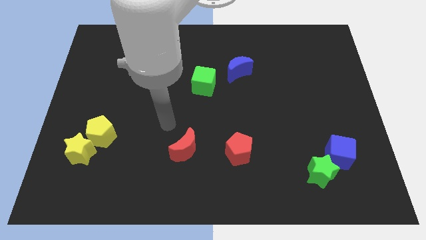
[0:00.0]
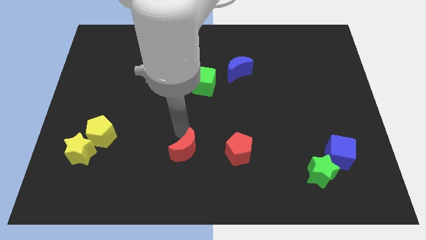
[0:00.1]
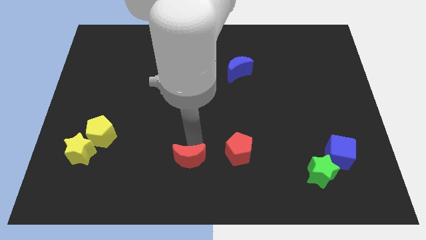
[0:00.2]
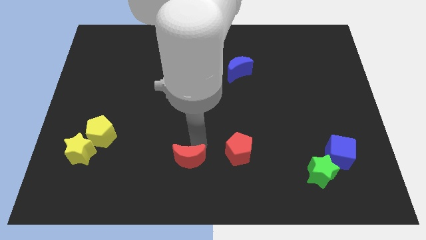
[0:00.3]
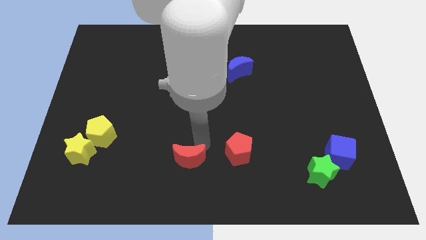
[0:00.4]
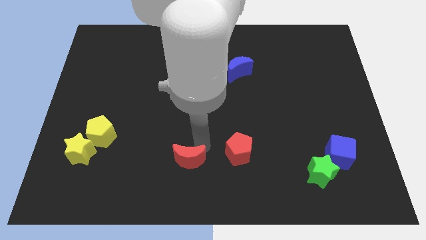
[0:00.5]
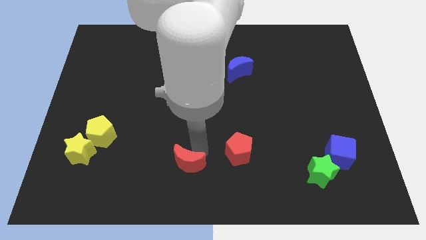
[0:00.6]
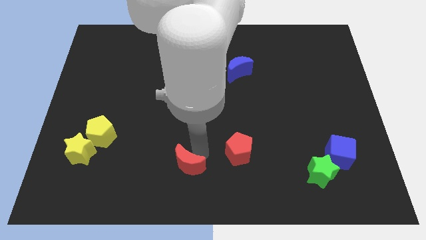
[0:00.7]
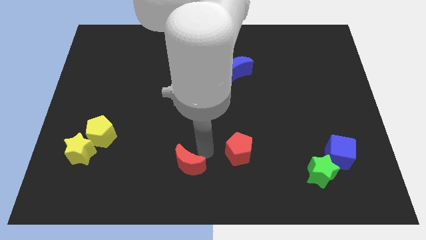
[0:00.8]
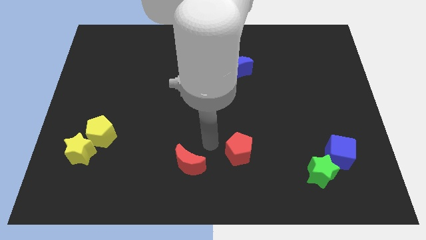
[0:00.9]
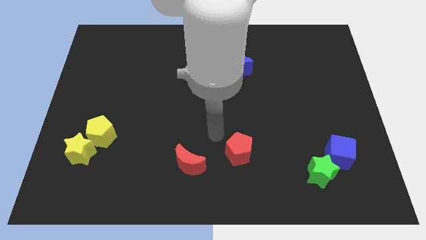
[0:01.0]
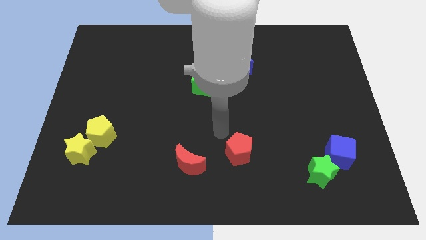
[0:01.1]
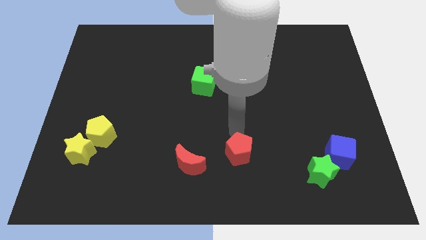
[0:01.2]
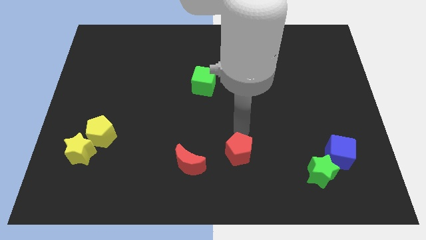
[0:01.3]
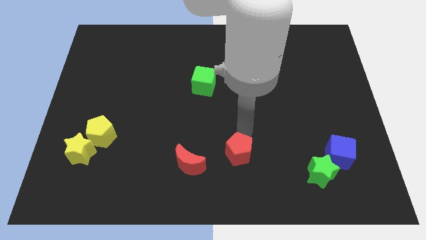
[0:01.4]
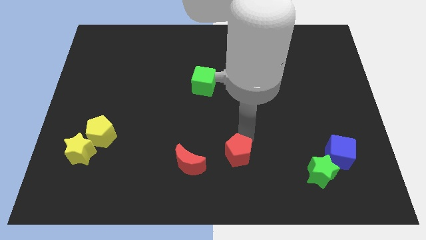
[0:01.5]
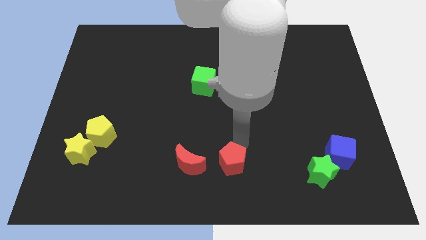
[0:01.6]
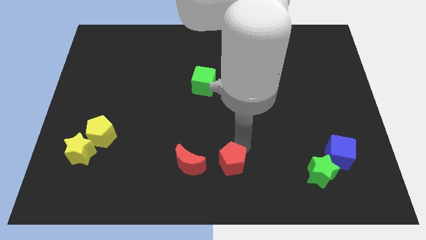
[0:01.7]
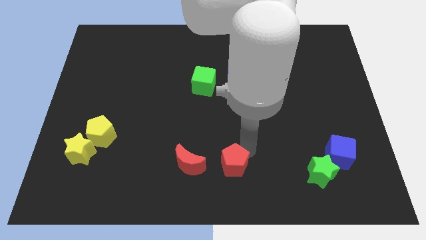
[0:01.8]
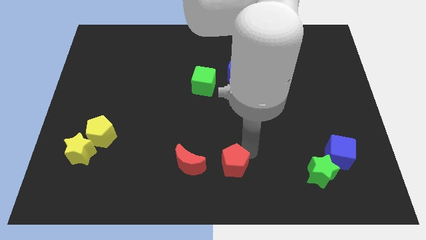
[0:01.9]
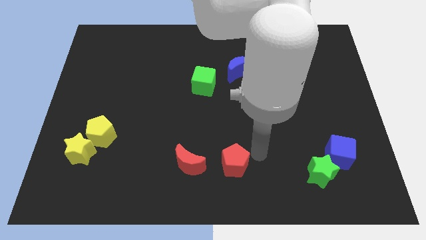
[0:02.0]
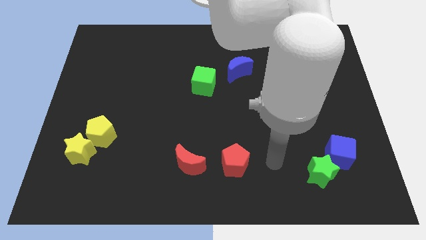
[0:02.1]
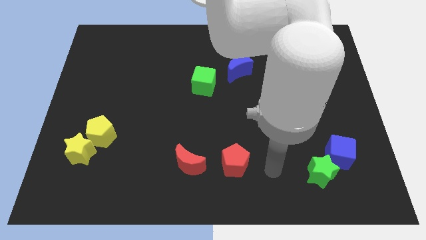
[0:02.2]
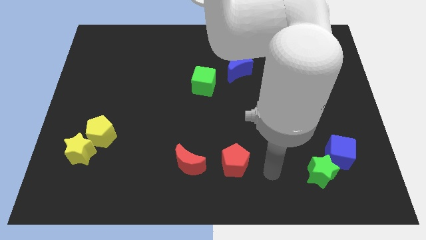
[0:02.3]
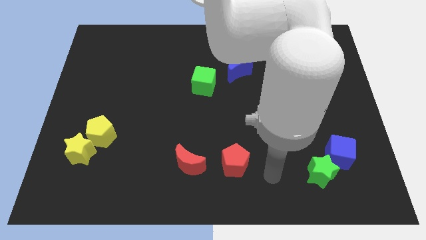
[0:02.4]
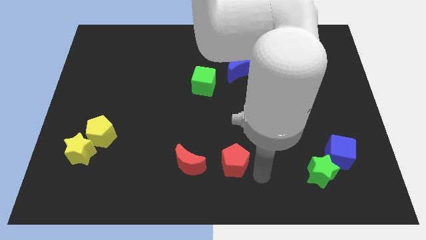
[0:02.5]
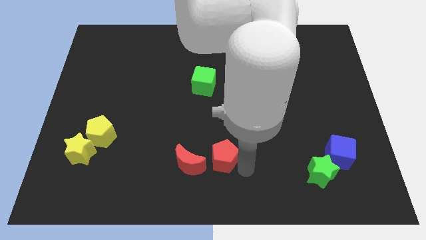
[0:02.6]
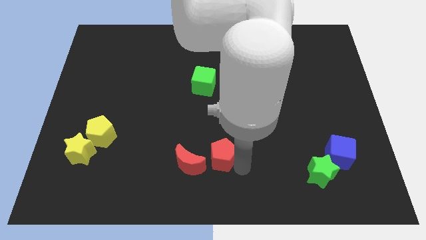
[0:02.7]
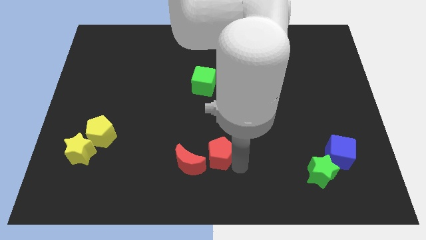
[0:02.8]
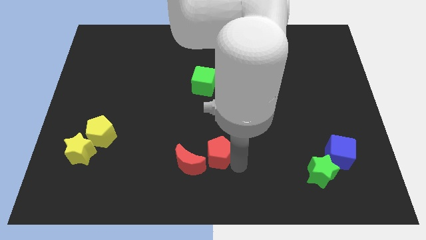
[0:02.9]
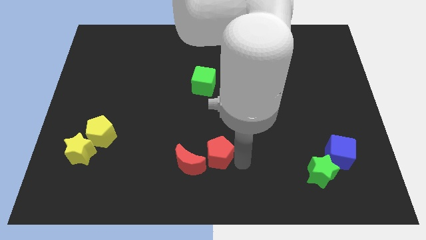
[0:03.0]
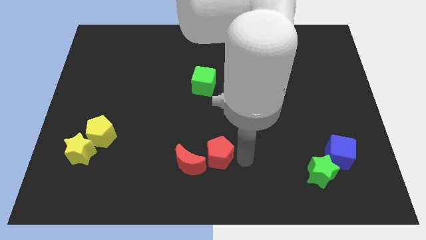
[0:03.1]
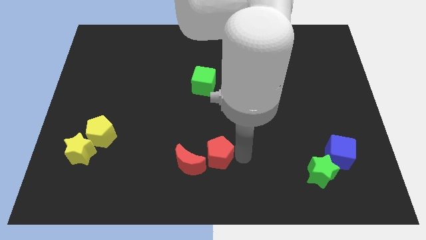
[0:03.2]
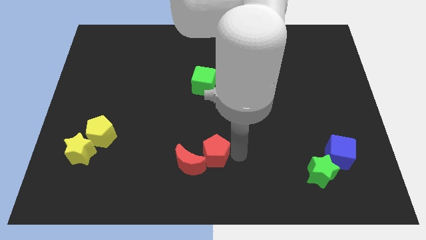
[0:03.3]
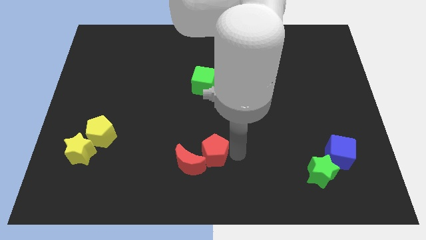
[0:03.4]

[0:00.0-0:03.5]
push the red pentagon into the red moon

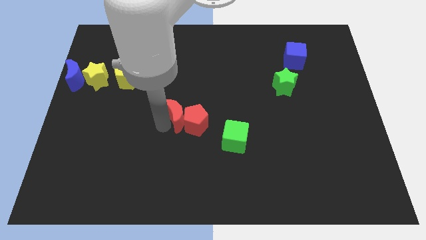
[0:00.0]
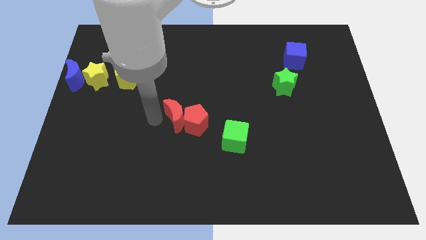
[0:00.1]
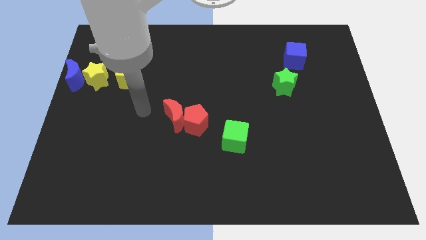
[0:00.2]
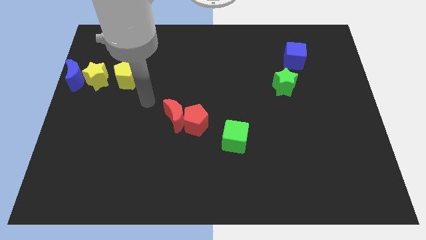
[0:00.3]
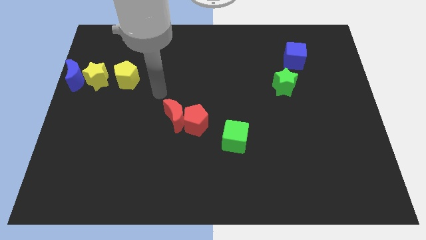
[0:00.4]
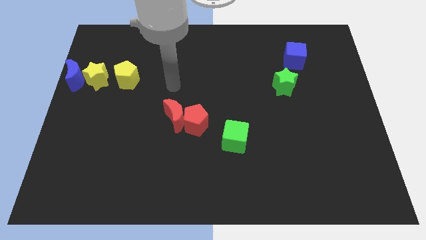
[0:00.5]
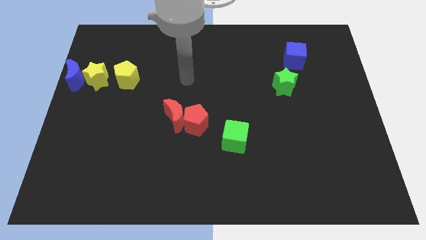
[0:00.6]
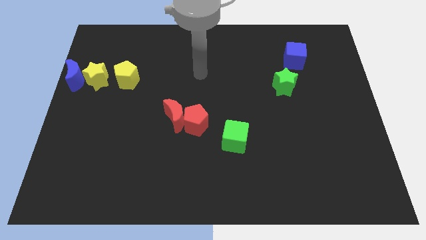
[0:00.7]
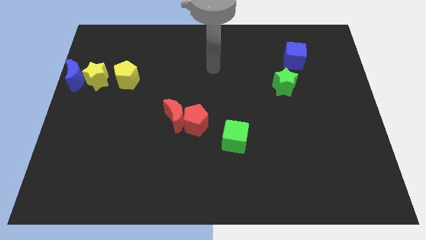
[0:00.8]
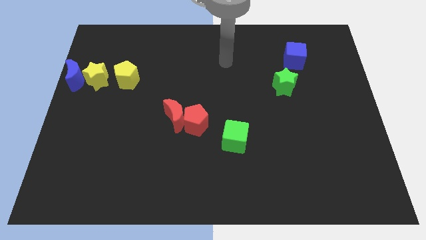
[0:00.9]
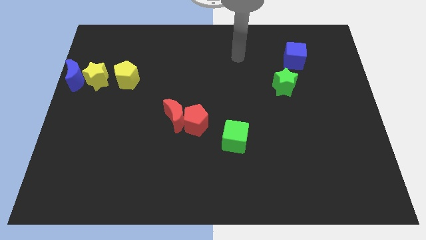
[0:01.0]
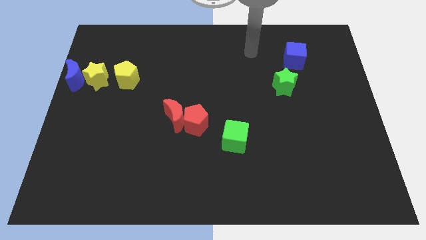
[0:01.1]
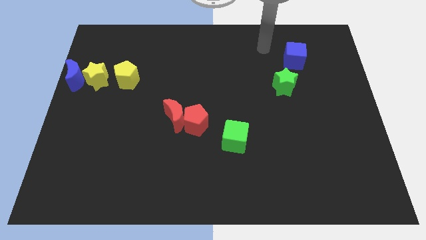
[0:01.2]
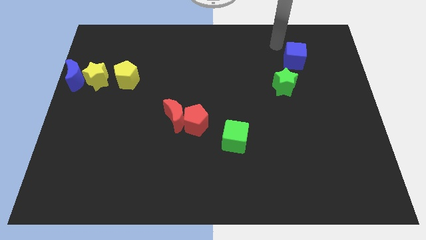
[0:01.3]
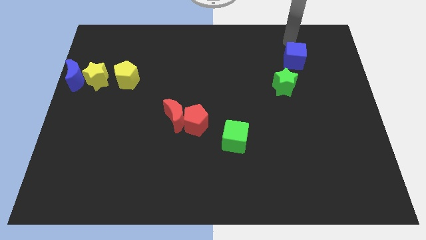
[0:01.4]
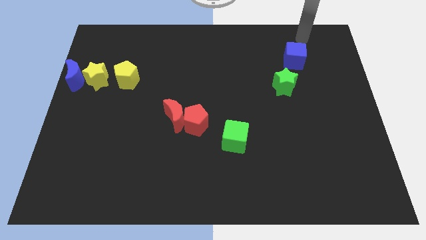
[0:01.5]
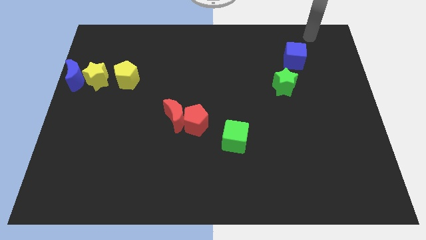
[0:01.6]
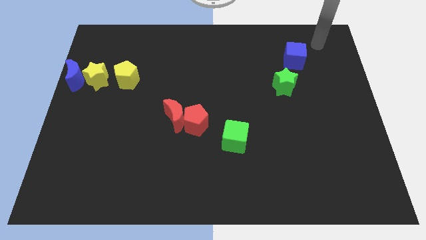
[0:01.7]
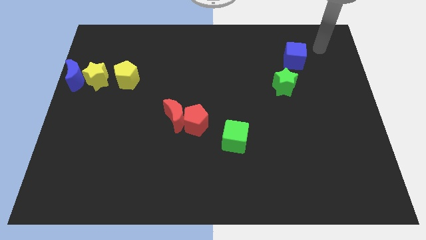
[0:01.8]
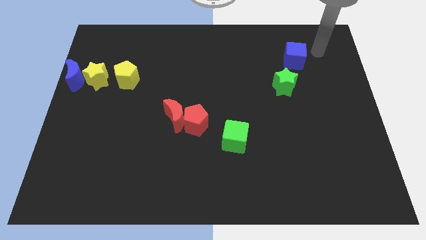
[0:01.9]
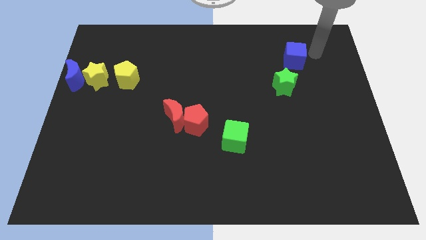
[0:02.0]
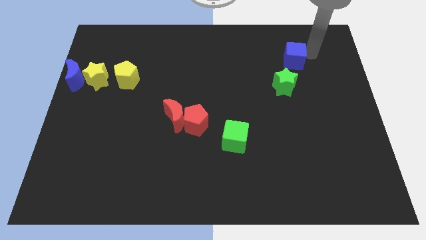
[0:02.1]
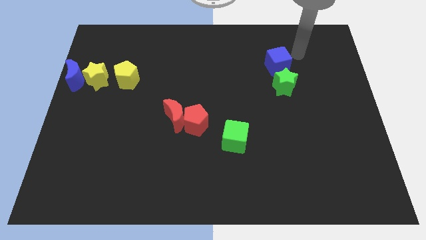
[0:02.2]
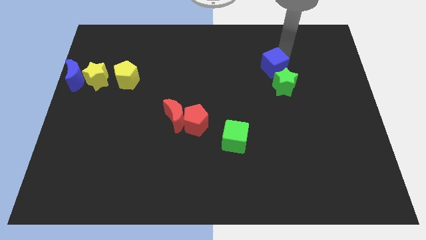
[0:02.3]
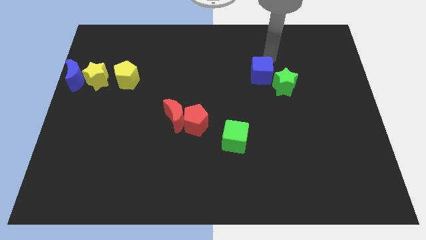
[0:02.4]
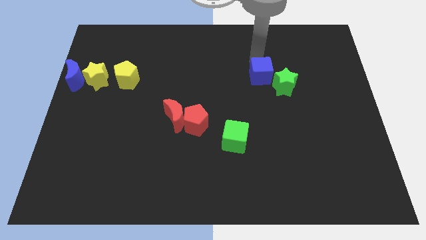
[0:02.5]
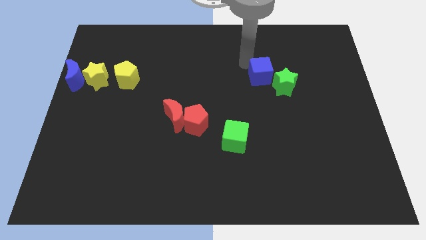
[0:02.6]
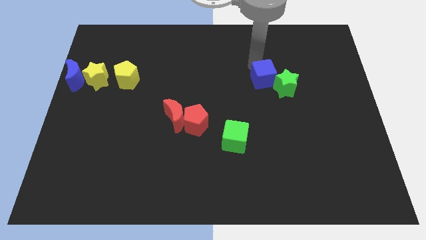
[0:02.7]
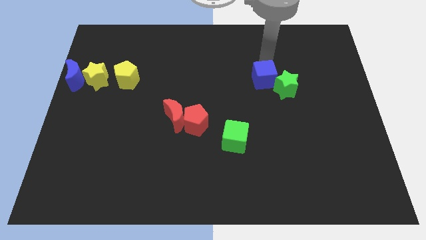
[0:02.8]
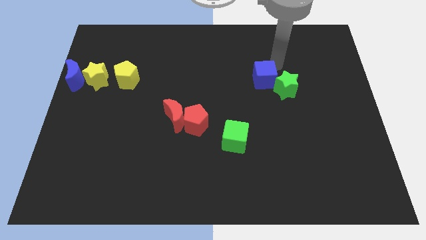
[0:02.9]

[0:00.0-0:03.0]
move the blue cube at the top left of the green star

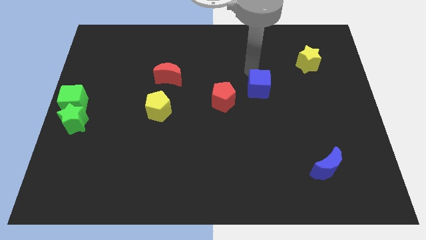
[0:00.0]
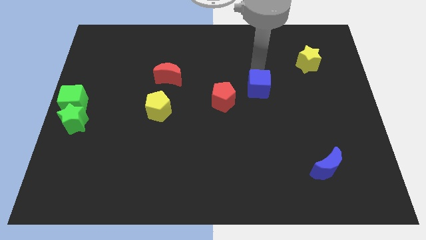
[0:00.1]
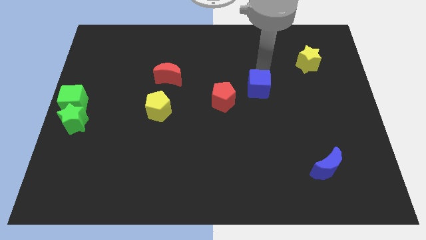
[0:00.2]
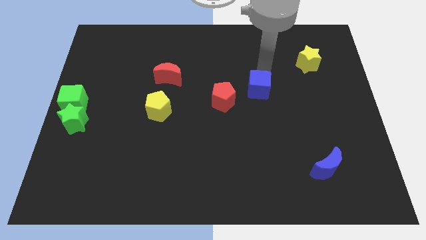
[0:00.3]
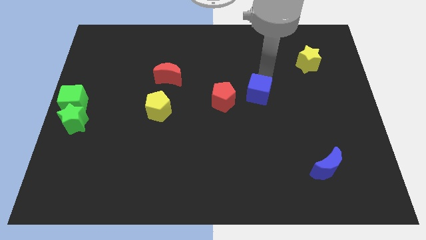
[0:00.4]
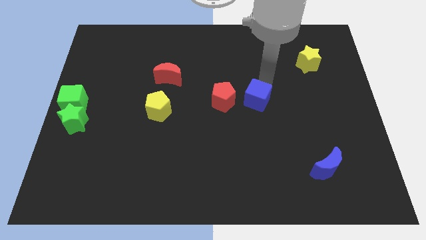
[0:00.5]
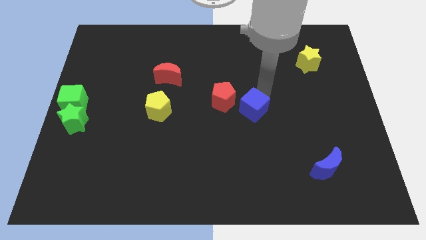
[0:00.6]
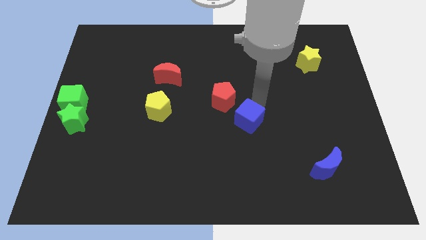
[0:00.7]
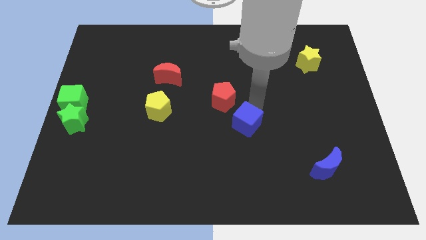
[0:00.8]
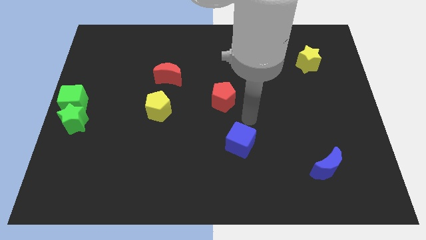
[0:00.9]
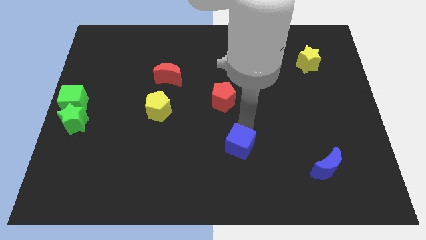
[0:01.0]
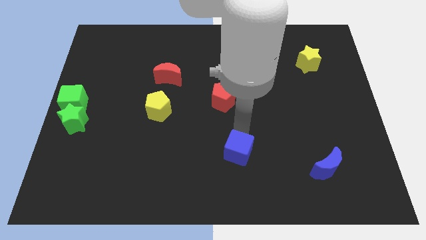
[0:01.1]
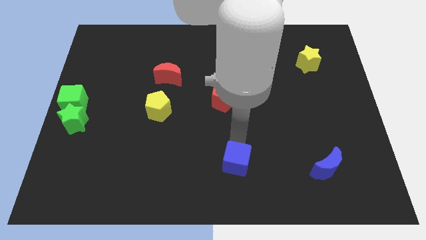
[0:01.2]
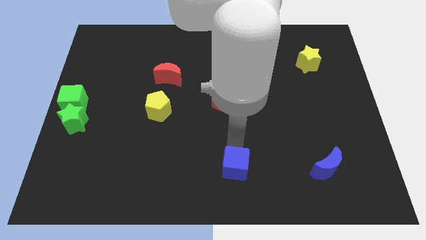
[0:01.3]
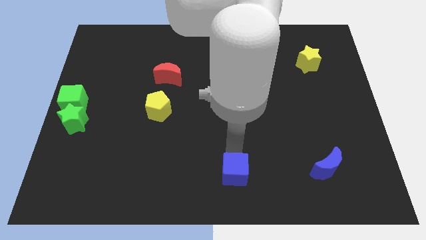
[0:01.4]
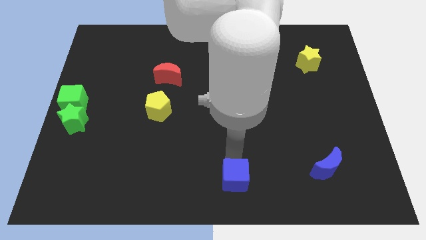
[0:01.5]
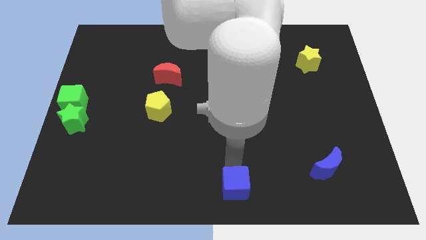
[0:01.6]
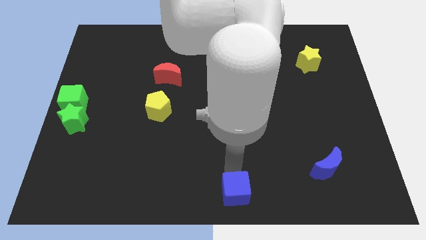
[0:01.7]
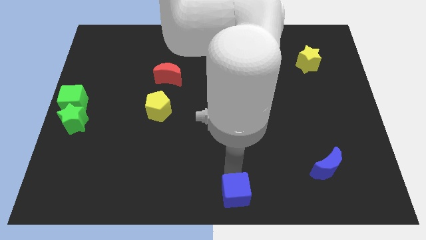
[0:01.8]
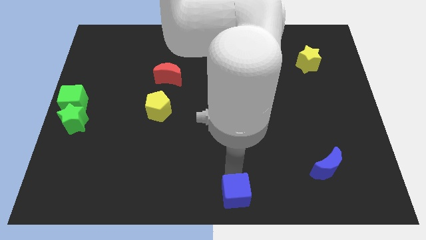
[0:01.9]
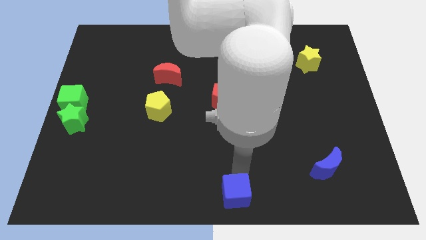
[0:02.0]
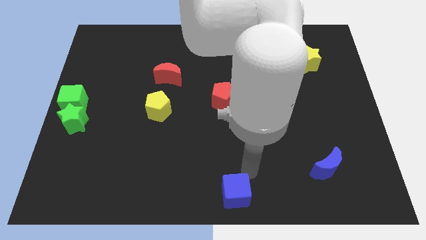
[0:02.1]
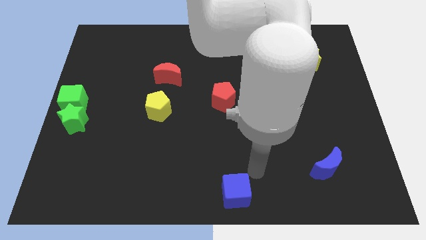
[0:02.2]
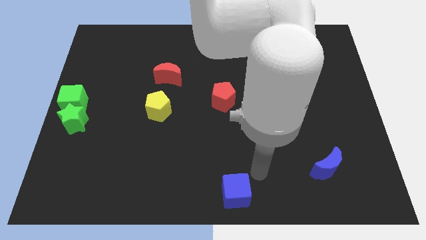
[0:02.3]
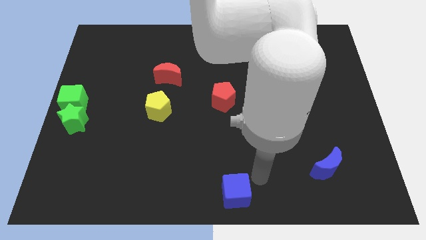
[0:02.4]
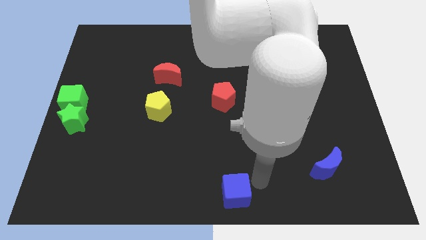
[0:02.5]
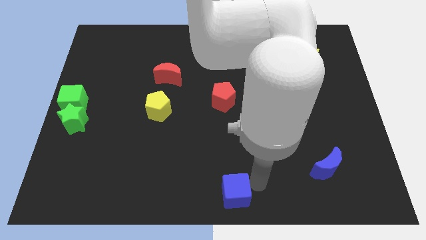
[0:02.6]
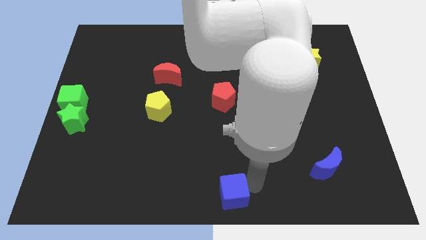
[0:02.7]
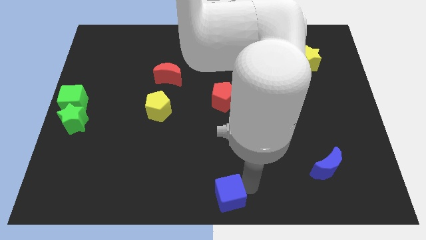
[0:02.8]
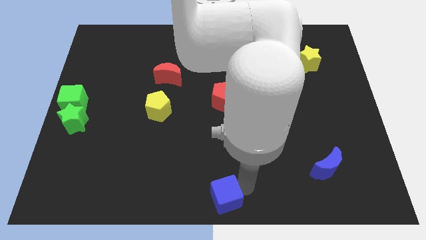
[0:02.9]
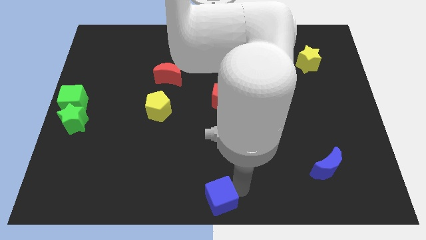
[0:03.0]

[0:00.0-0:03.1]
place blue cube on the bottom center od the board
